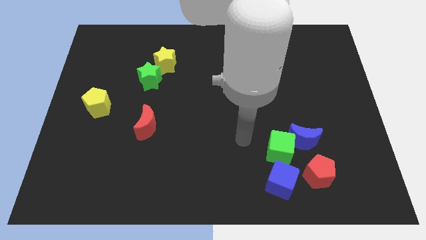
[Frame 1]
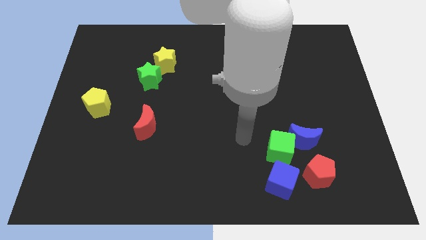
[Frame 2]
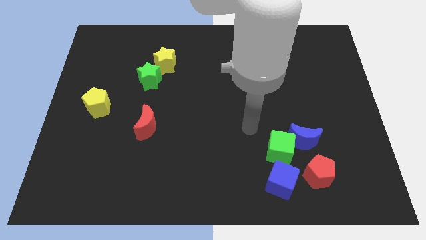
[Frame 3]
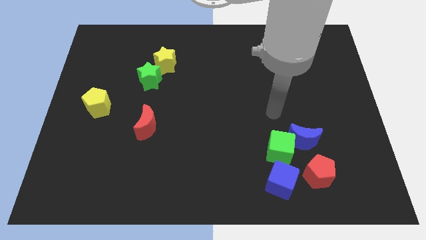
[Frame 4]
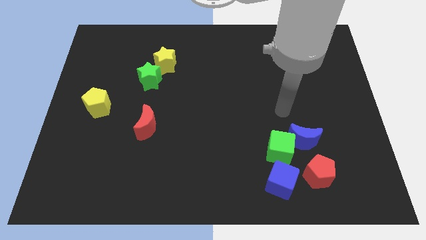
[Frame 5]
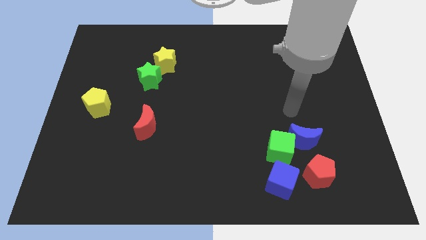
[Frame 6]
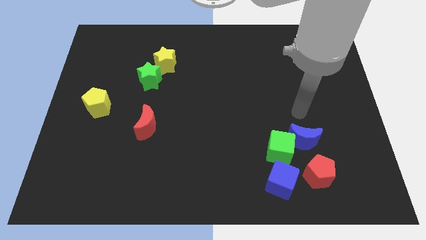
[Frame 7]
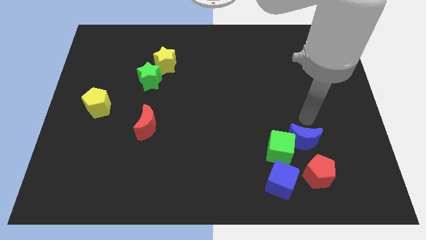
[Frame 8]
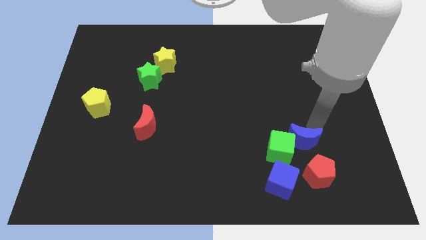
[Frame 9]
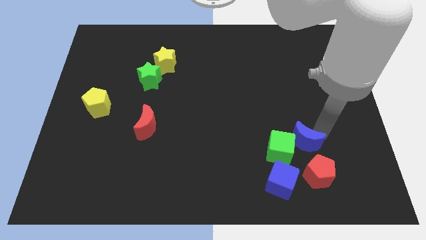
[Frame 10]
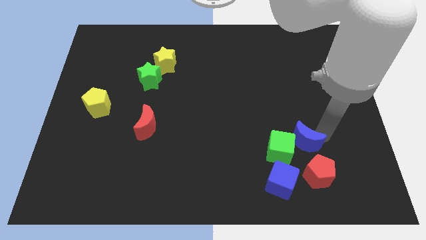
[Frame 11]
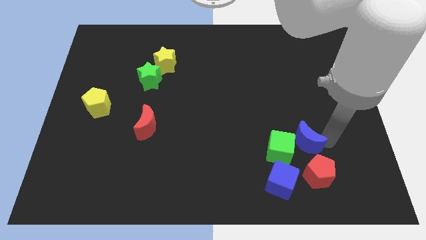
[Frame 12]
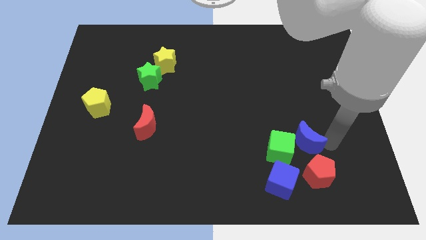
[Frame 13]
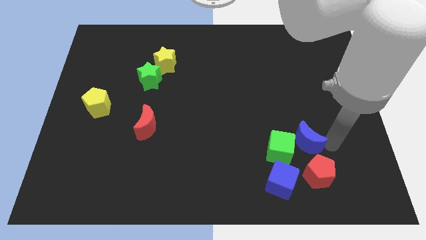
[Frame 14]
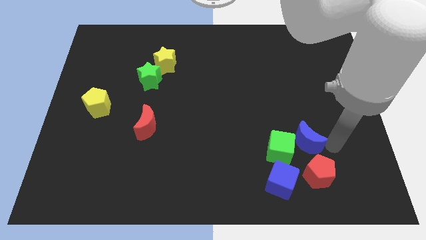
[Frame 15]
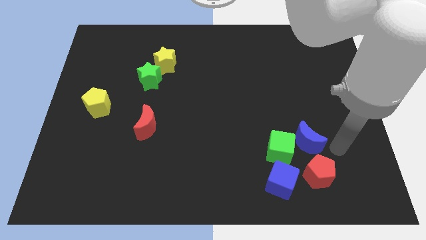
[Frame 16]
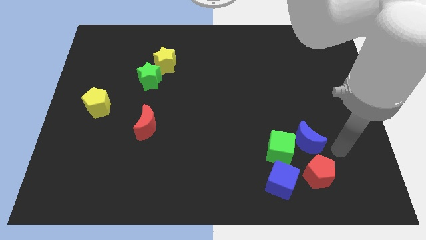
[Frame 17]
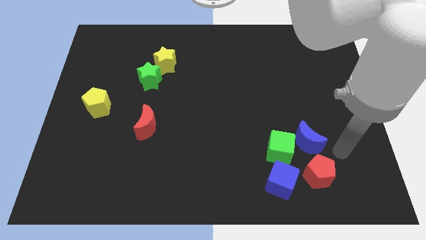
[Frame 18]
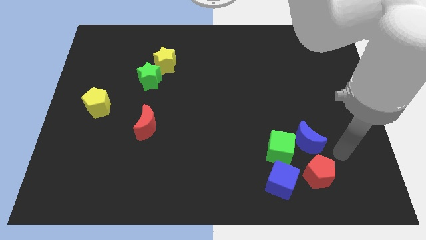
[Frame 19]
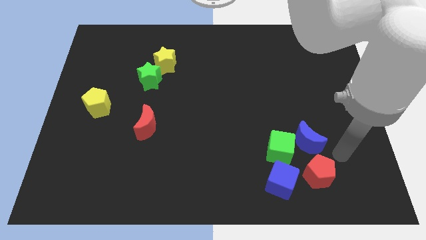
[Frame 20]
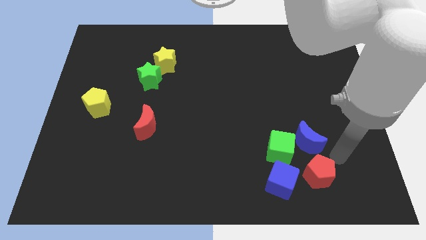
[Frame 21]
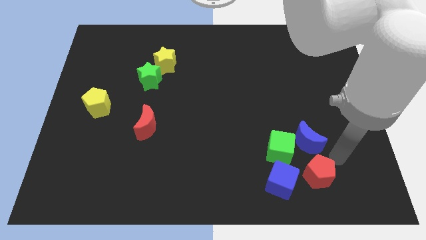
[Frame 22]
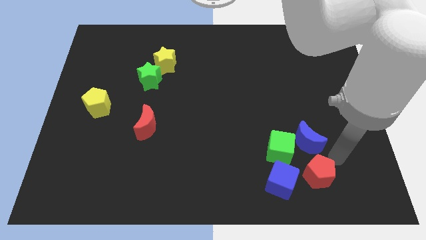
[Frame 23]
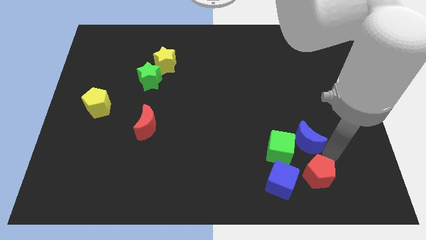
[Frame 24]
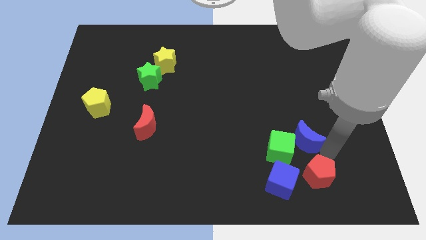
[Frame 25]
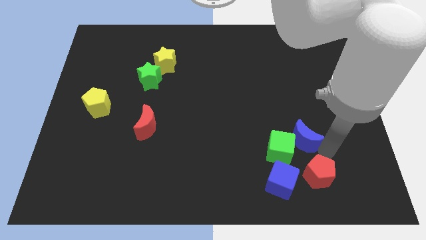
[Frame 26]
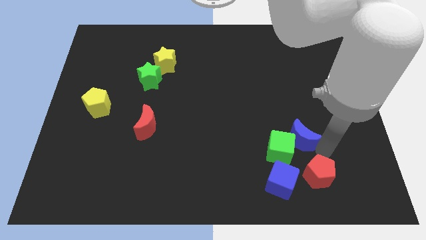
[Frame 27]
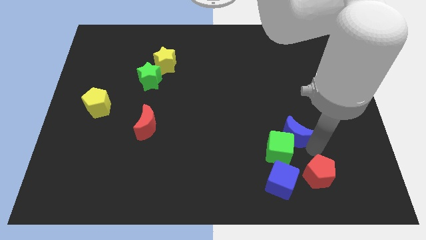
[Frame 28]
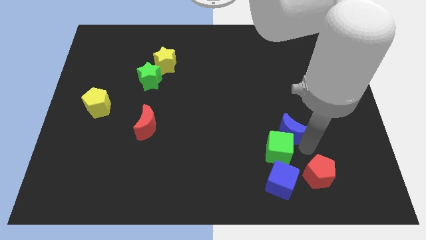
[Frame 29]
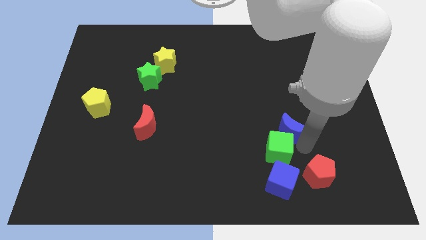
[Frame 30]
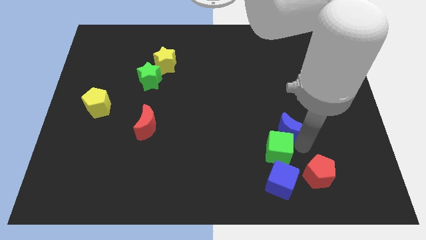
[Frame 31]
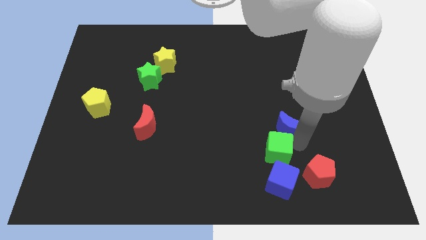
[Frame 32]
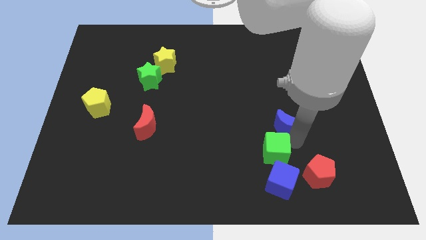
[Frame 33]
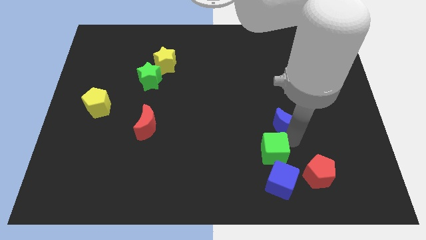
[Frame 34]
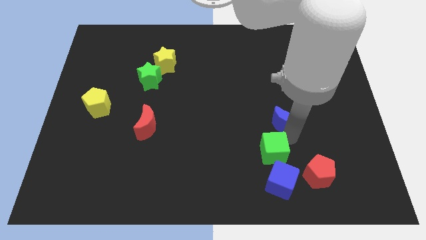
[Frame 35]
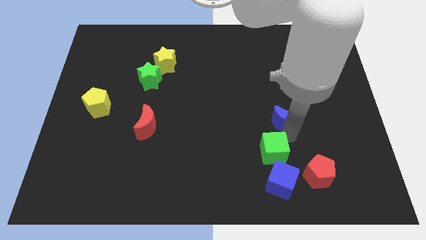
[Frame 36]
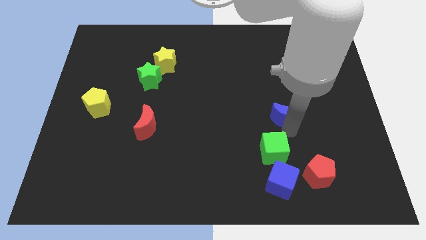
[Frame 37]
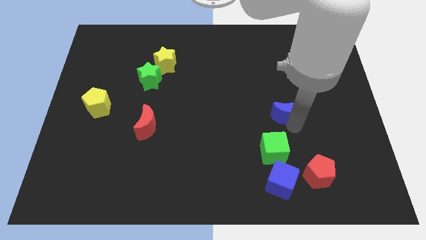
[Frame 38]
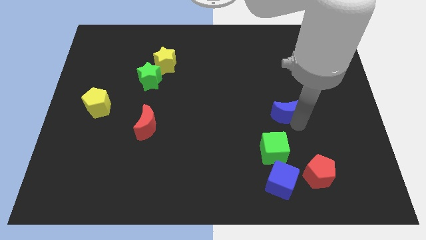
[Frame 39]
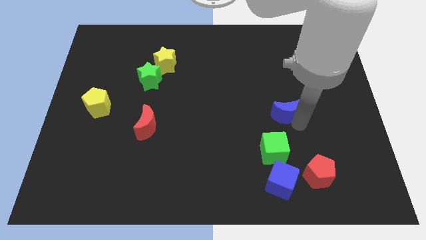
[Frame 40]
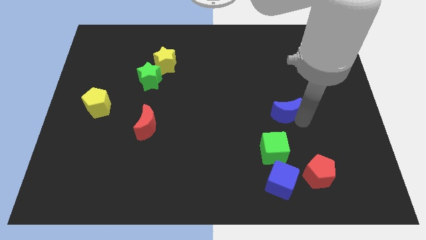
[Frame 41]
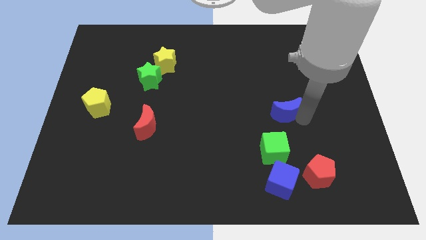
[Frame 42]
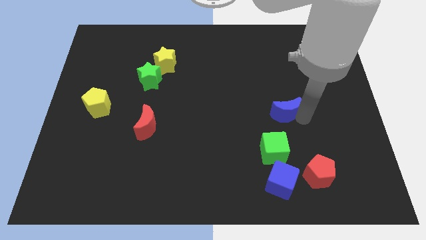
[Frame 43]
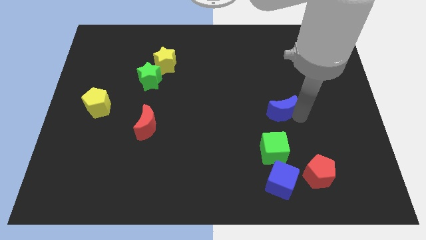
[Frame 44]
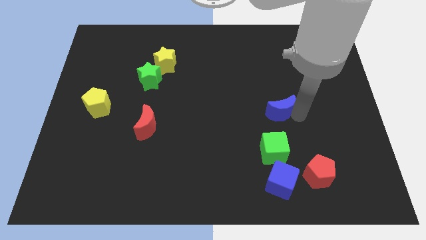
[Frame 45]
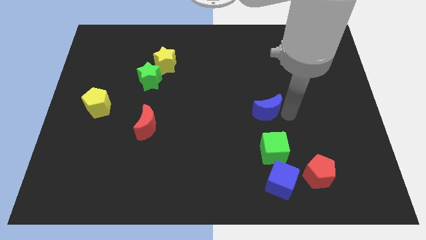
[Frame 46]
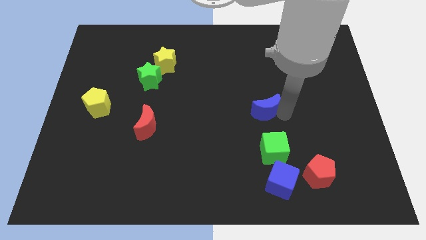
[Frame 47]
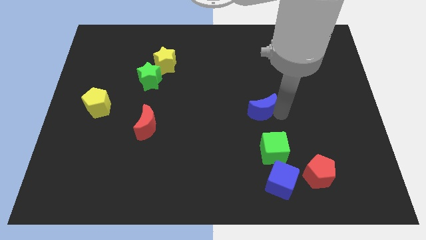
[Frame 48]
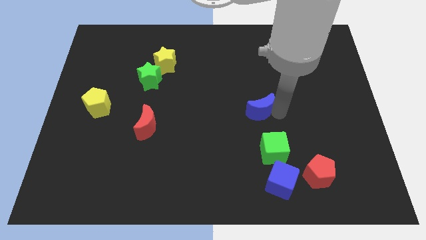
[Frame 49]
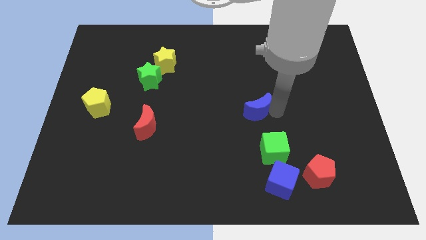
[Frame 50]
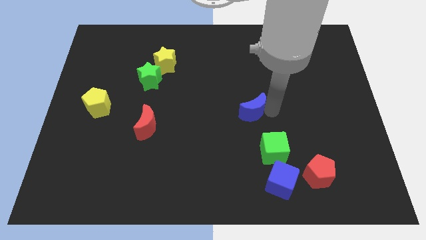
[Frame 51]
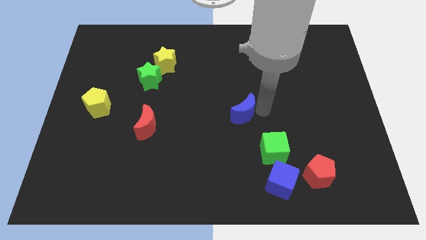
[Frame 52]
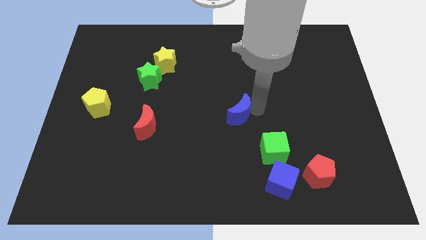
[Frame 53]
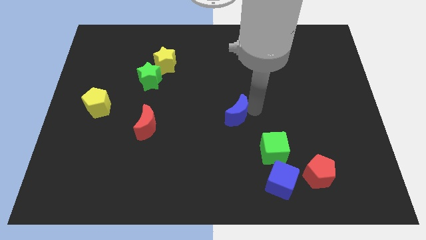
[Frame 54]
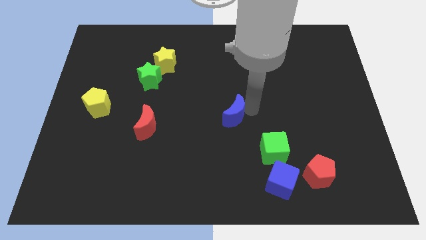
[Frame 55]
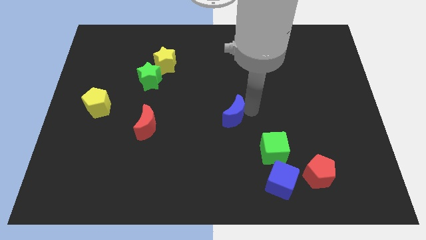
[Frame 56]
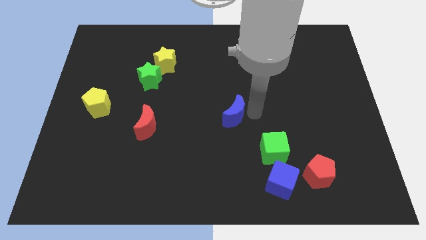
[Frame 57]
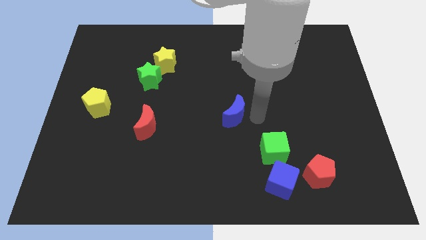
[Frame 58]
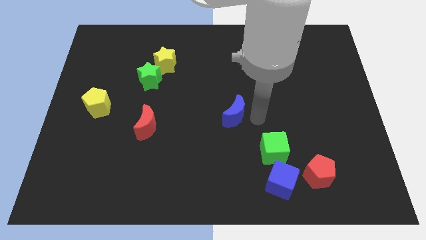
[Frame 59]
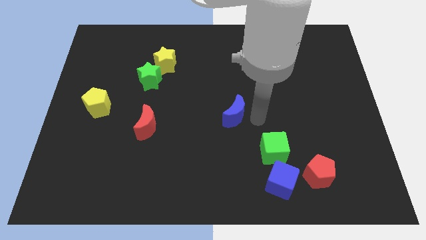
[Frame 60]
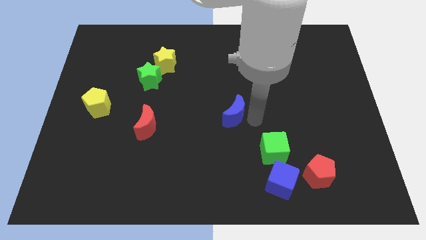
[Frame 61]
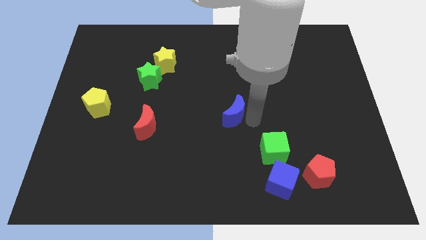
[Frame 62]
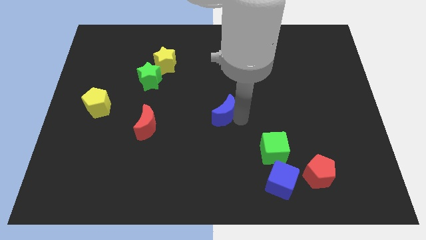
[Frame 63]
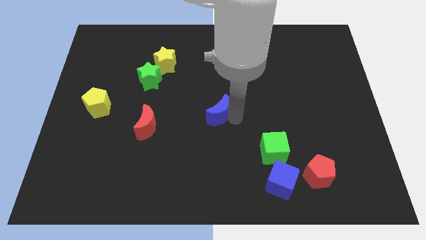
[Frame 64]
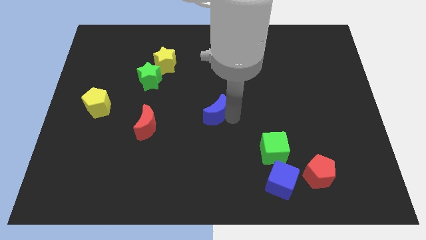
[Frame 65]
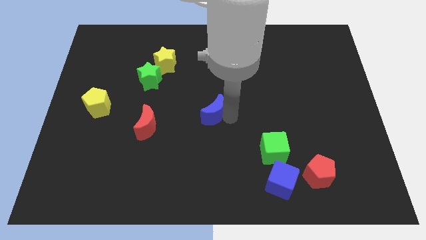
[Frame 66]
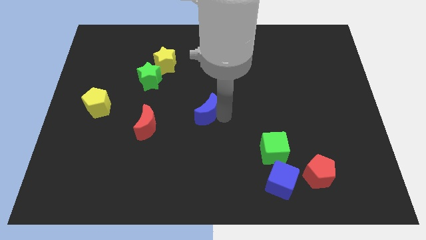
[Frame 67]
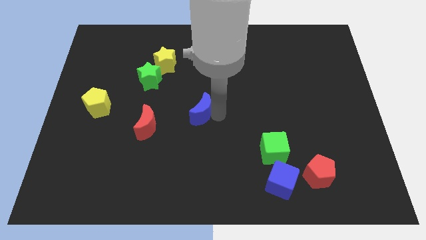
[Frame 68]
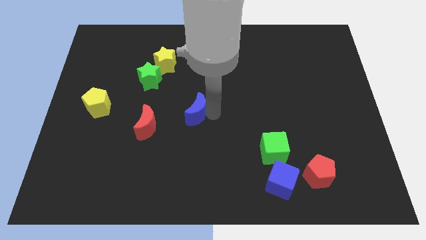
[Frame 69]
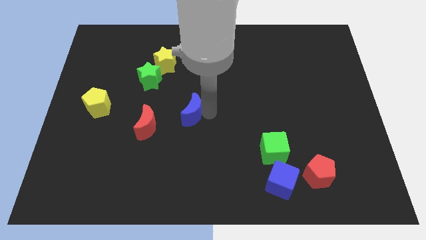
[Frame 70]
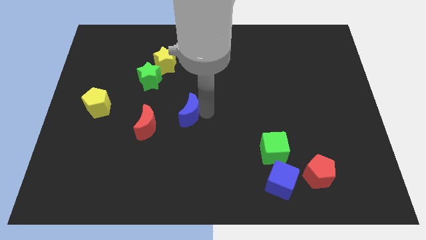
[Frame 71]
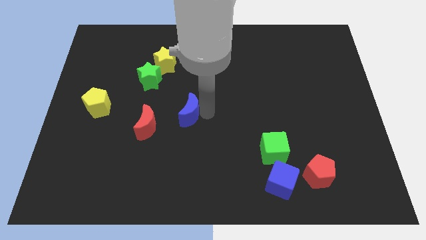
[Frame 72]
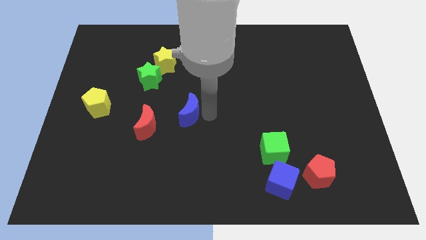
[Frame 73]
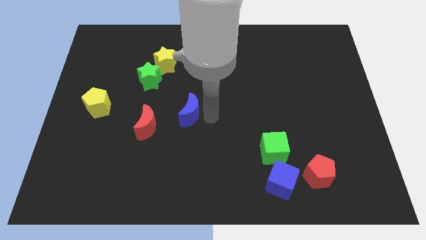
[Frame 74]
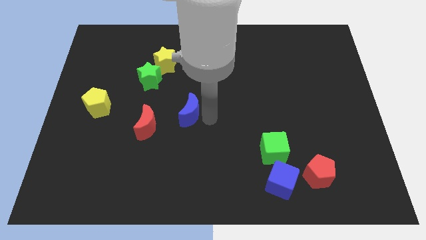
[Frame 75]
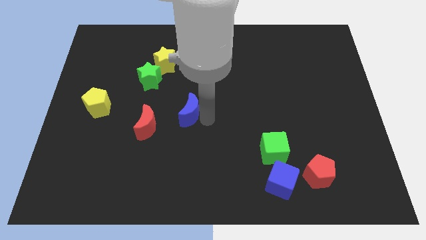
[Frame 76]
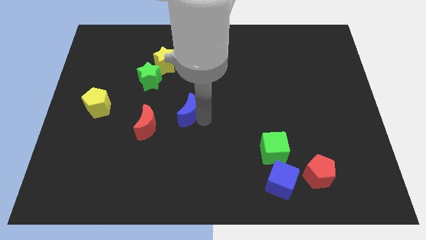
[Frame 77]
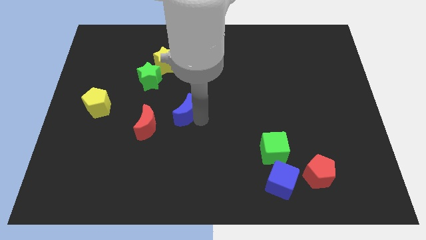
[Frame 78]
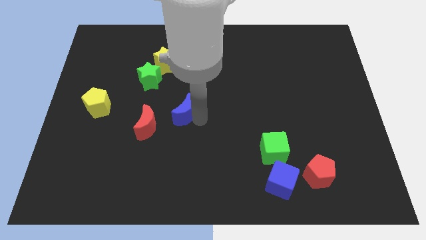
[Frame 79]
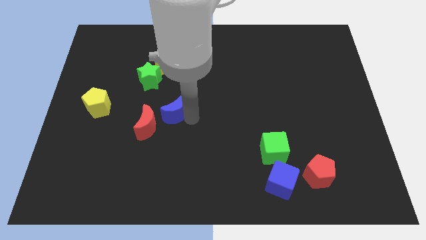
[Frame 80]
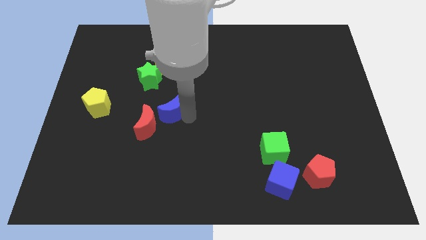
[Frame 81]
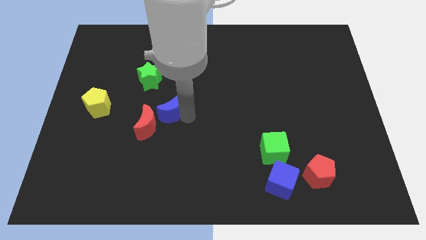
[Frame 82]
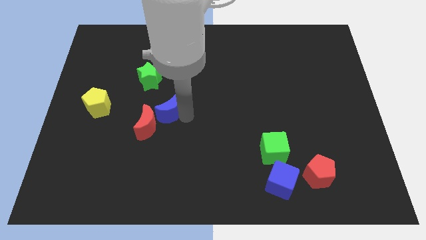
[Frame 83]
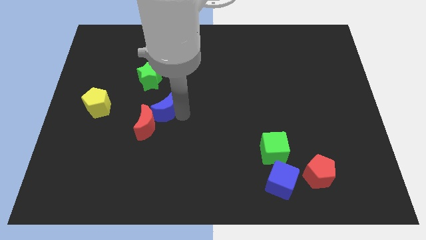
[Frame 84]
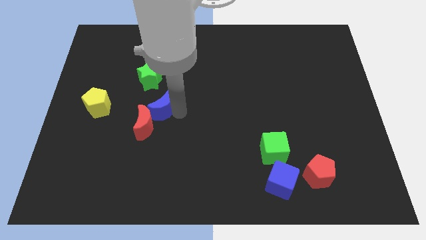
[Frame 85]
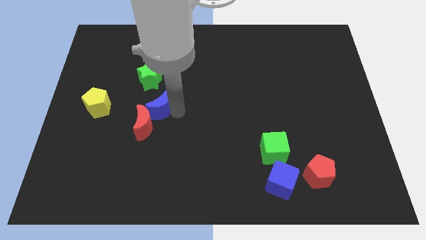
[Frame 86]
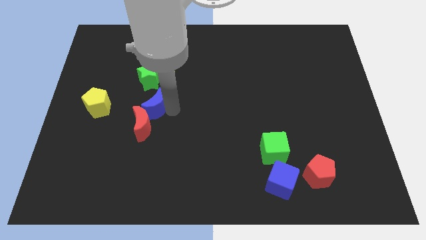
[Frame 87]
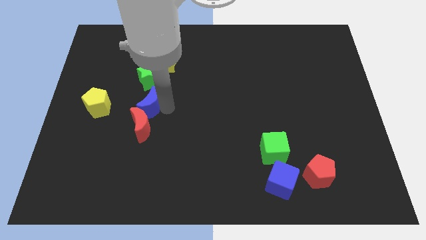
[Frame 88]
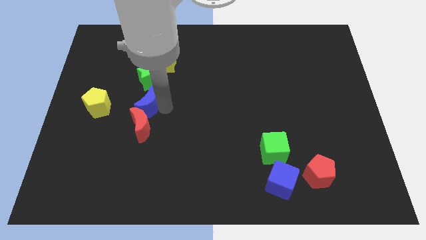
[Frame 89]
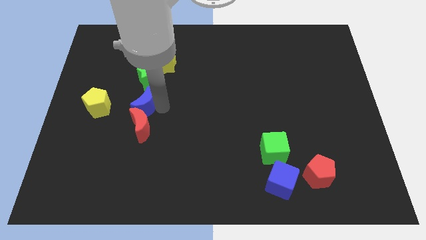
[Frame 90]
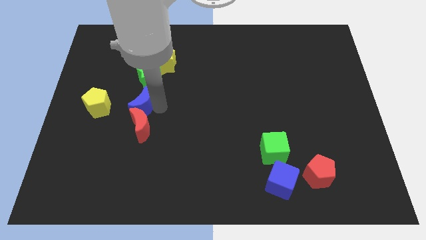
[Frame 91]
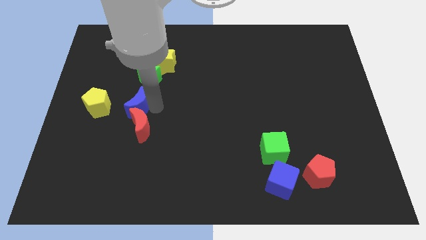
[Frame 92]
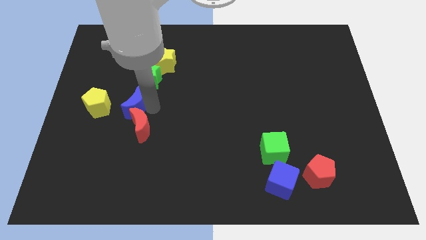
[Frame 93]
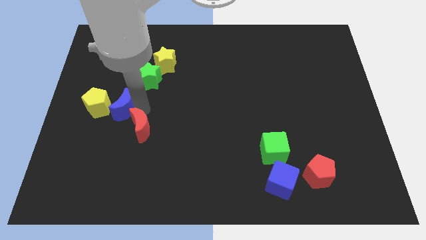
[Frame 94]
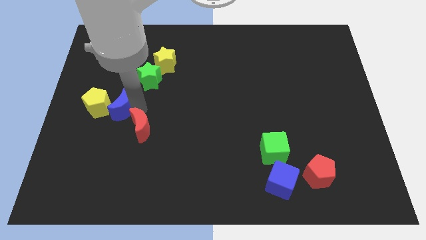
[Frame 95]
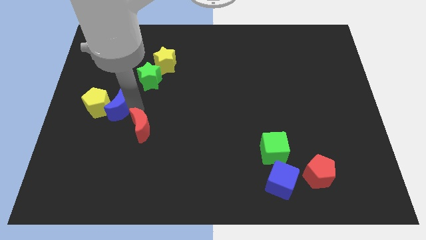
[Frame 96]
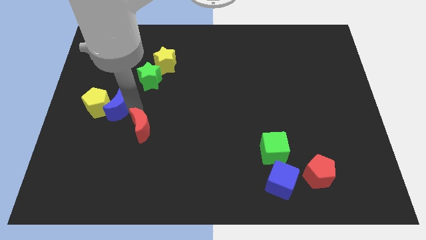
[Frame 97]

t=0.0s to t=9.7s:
slide the blue moon next to the yellow pentagon
